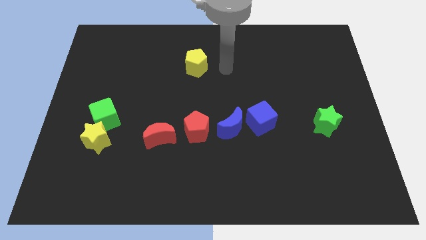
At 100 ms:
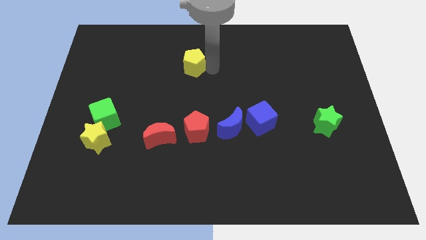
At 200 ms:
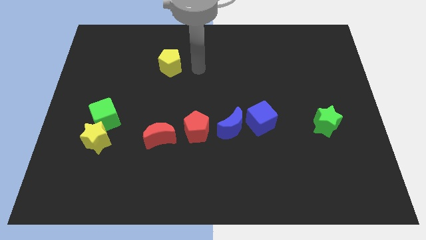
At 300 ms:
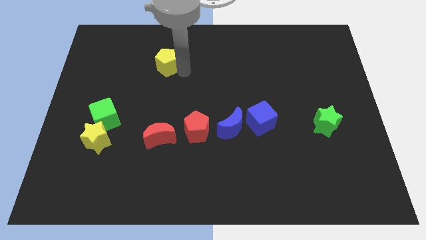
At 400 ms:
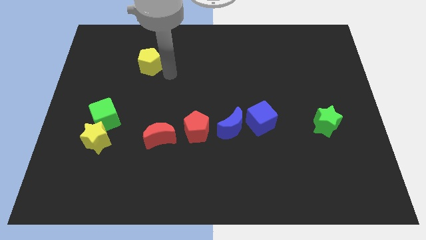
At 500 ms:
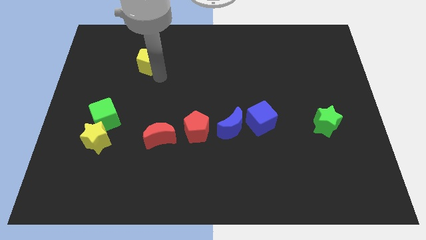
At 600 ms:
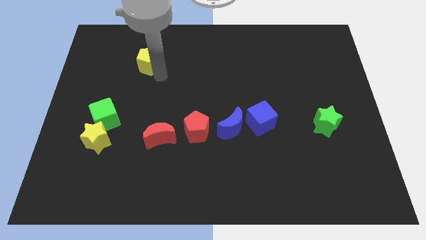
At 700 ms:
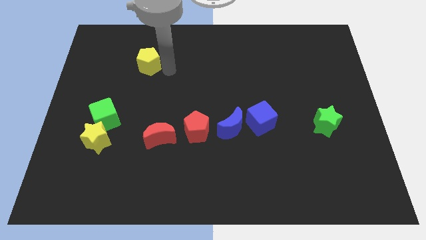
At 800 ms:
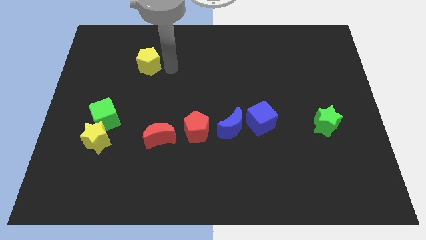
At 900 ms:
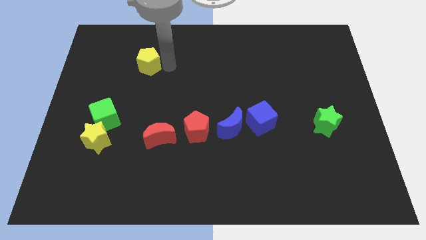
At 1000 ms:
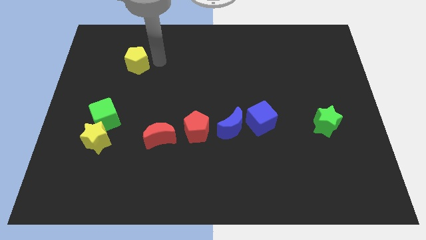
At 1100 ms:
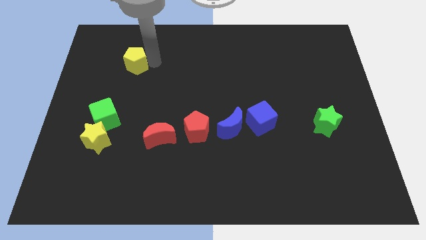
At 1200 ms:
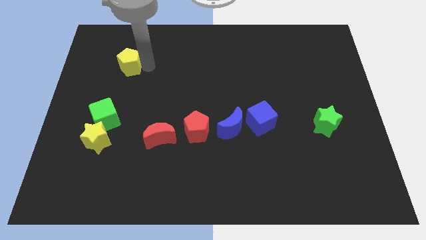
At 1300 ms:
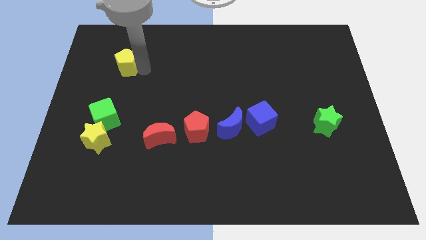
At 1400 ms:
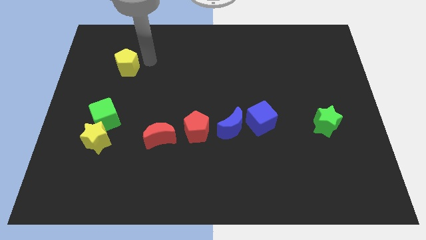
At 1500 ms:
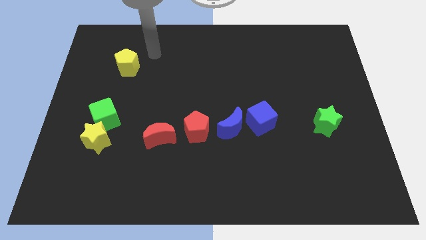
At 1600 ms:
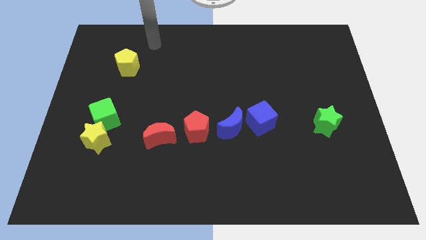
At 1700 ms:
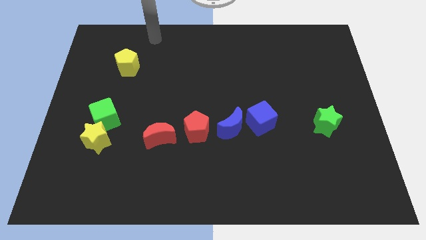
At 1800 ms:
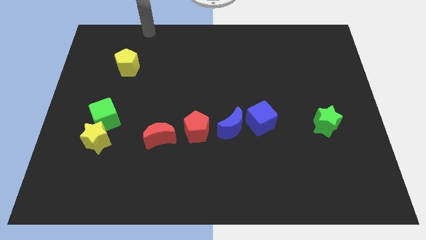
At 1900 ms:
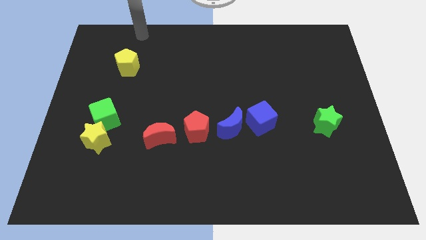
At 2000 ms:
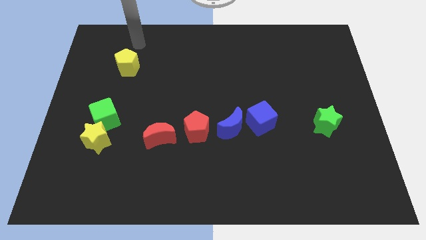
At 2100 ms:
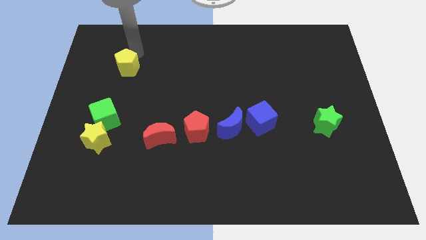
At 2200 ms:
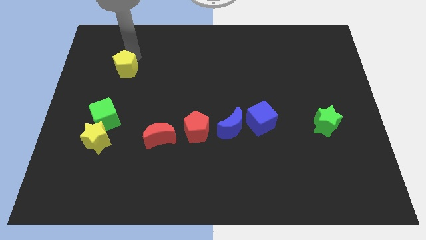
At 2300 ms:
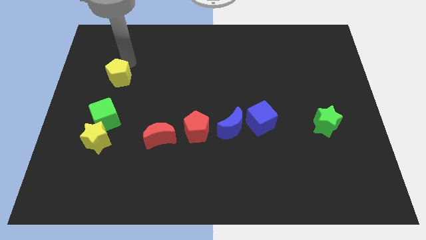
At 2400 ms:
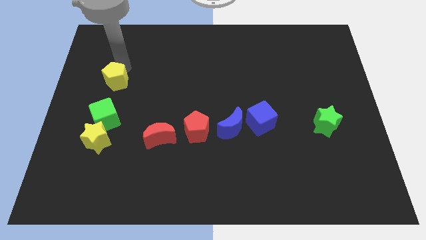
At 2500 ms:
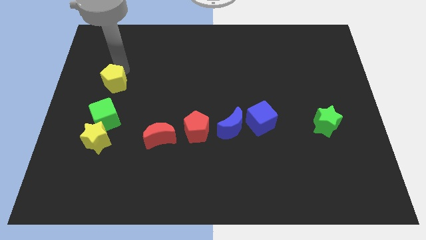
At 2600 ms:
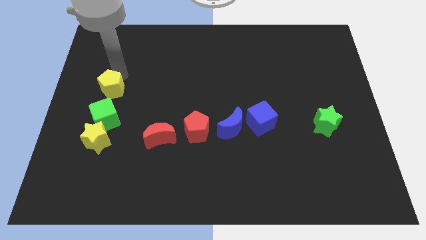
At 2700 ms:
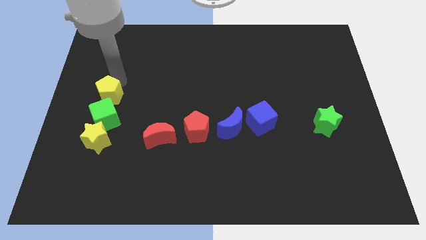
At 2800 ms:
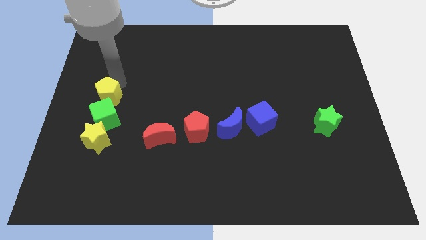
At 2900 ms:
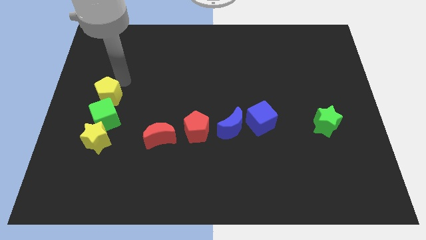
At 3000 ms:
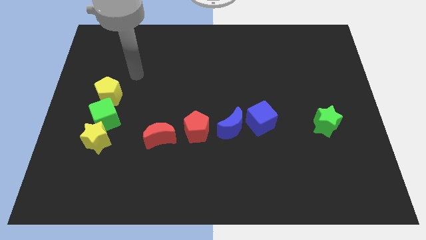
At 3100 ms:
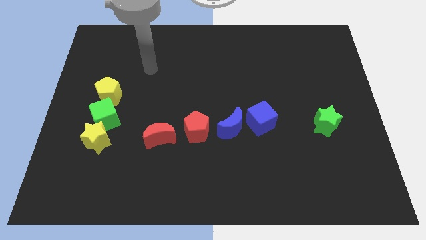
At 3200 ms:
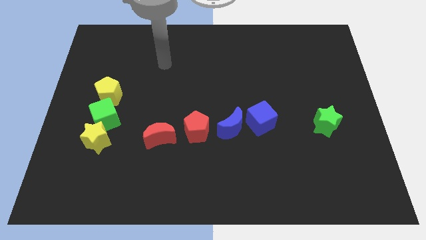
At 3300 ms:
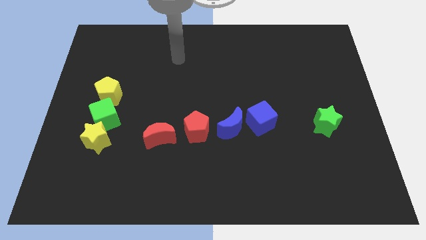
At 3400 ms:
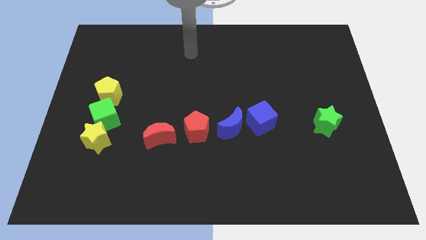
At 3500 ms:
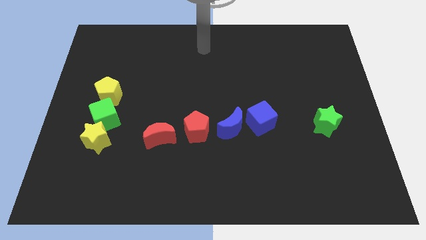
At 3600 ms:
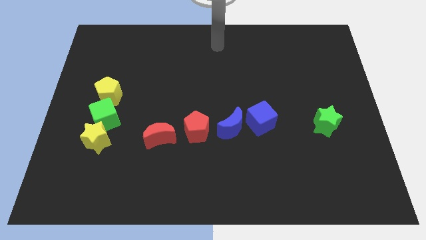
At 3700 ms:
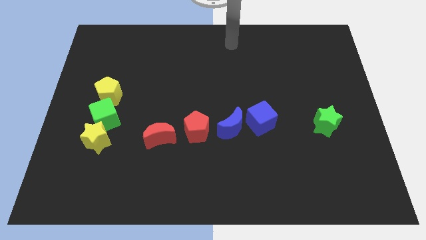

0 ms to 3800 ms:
place the yellow pentagon above the green cube

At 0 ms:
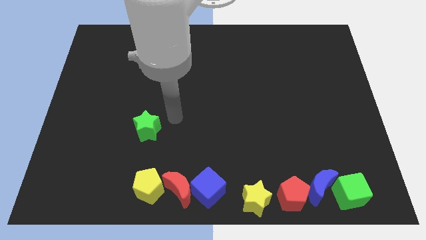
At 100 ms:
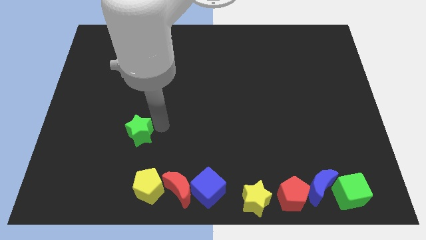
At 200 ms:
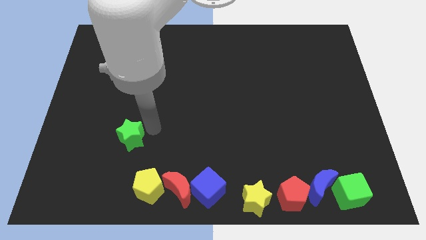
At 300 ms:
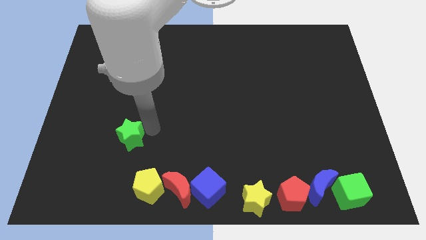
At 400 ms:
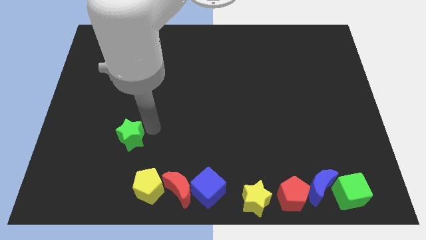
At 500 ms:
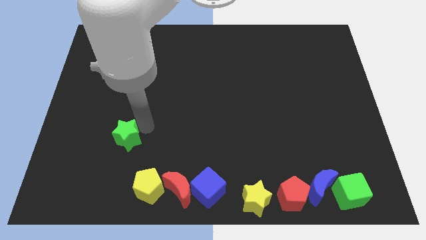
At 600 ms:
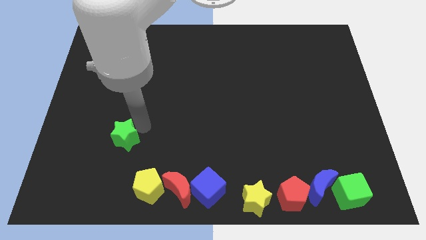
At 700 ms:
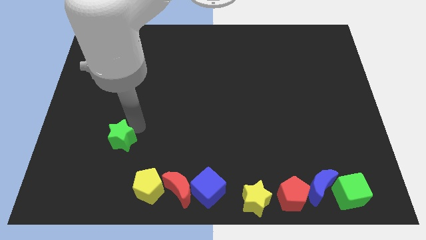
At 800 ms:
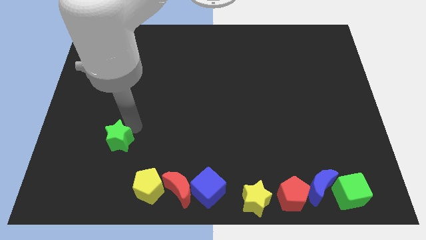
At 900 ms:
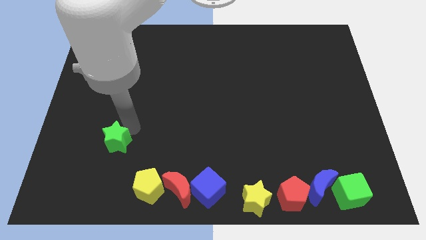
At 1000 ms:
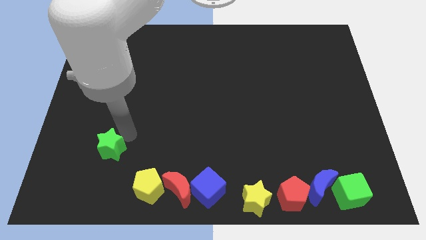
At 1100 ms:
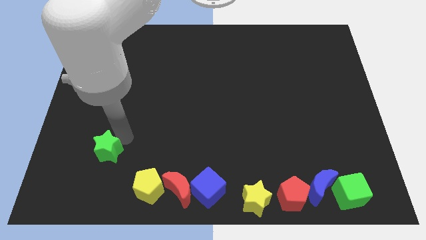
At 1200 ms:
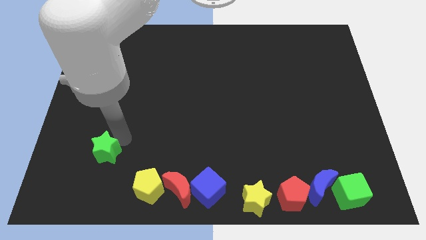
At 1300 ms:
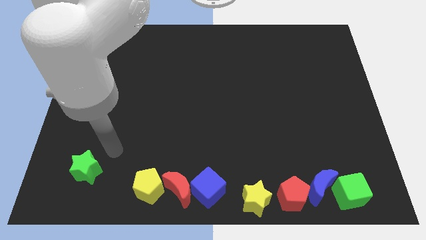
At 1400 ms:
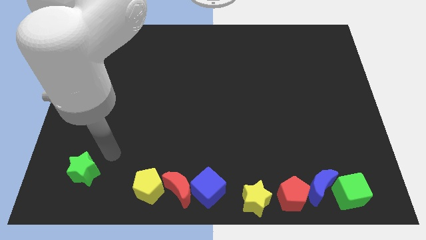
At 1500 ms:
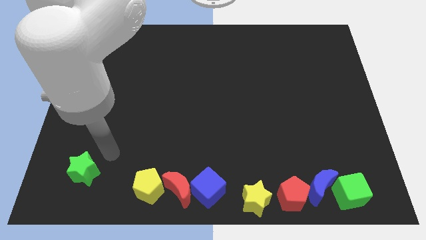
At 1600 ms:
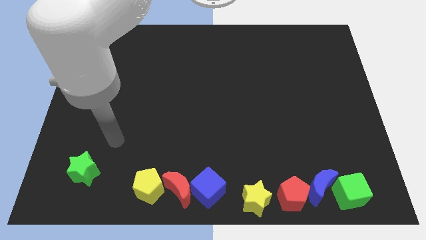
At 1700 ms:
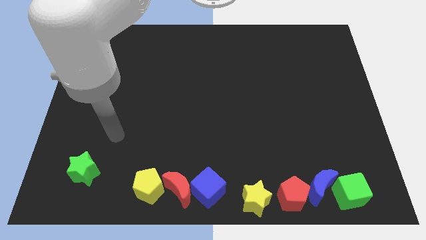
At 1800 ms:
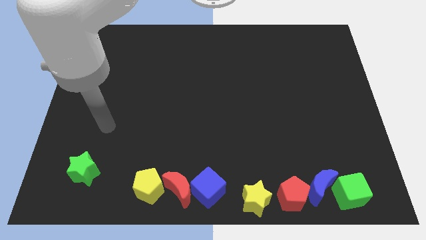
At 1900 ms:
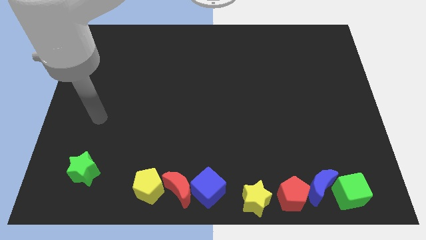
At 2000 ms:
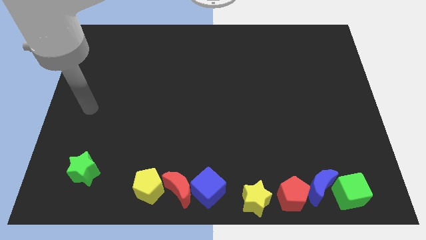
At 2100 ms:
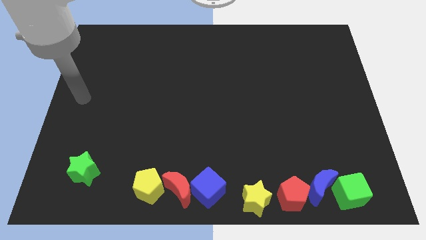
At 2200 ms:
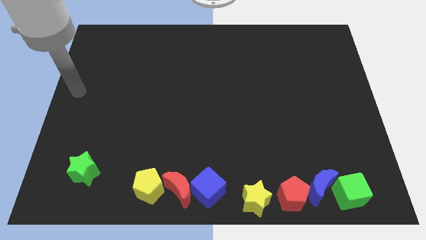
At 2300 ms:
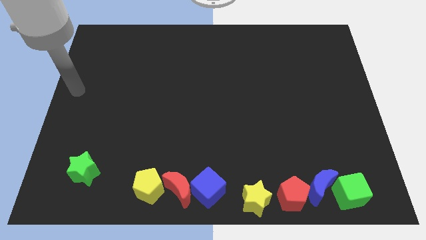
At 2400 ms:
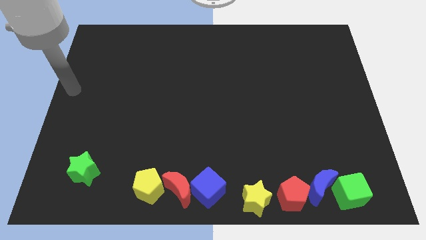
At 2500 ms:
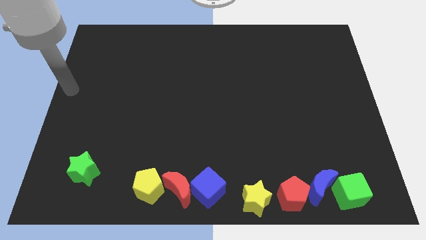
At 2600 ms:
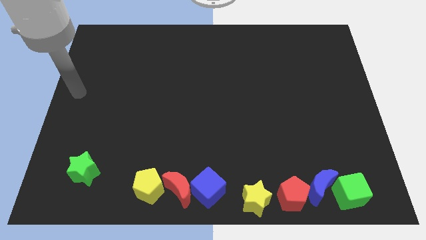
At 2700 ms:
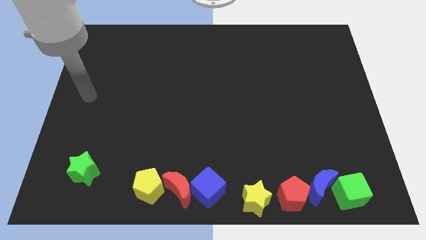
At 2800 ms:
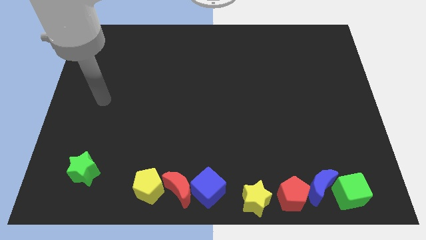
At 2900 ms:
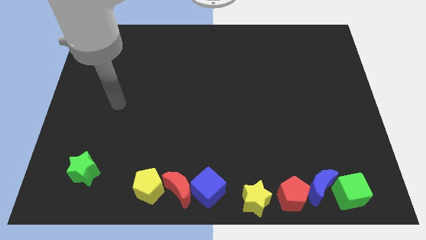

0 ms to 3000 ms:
move the green star diagonally down

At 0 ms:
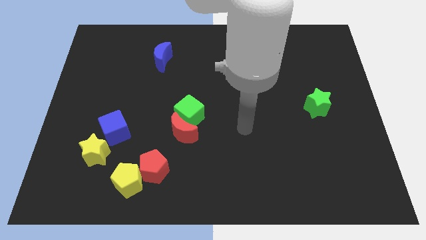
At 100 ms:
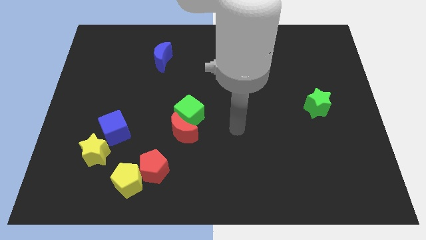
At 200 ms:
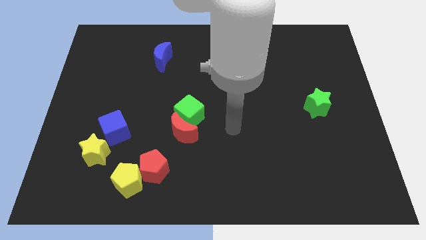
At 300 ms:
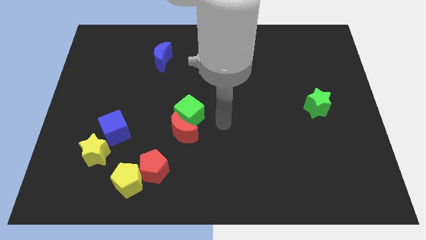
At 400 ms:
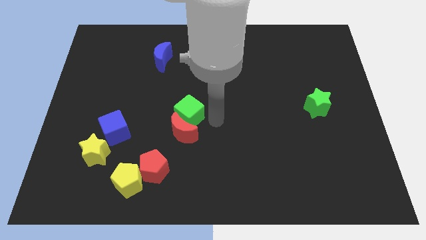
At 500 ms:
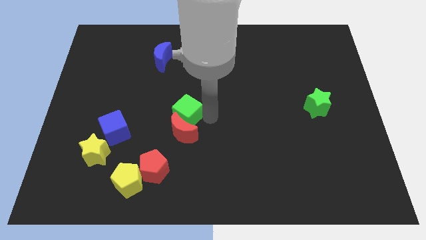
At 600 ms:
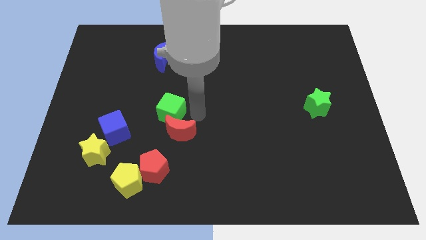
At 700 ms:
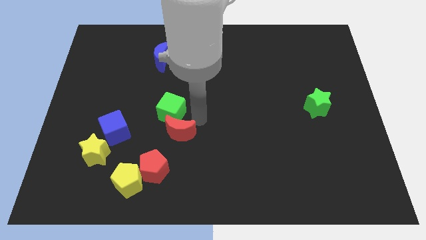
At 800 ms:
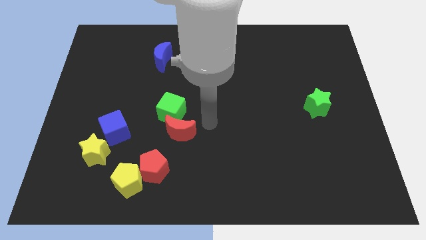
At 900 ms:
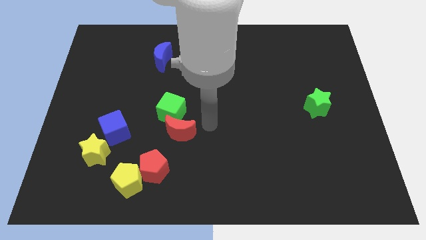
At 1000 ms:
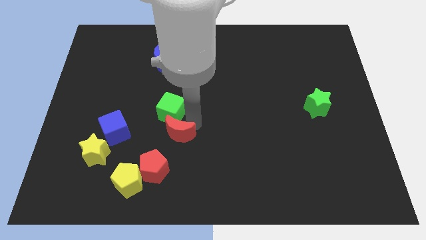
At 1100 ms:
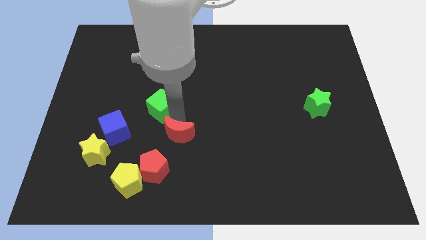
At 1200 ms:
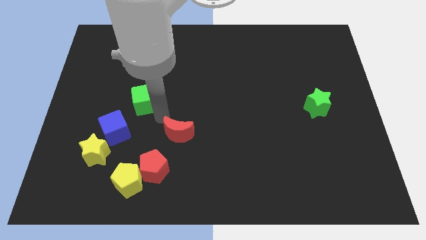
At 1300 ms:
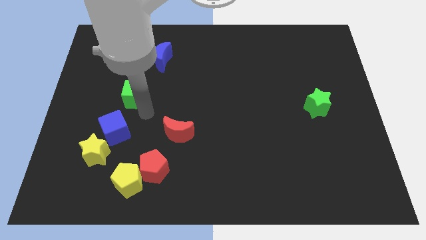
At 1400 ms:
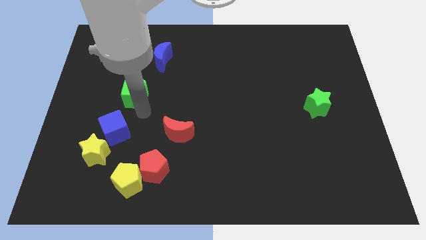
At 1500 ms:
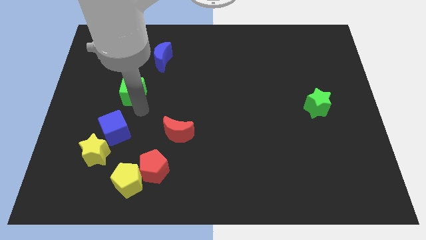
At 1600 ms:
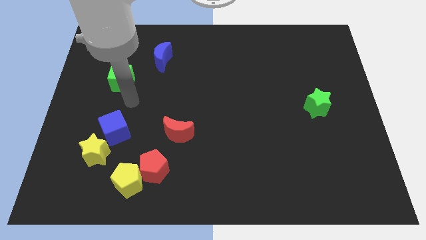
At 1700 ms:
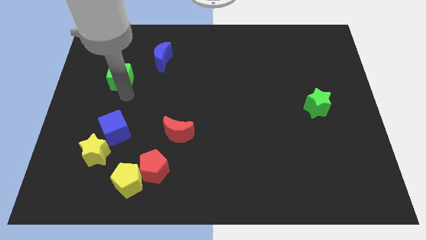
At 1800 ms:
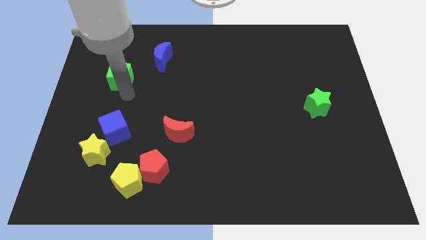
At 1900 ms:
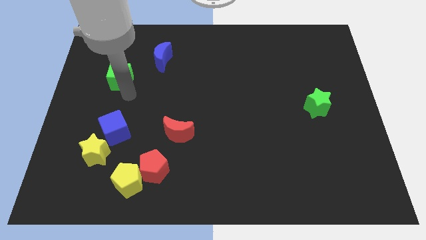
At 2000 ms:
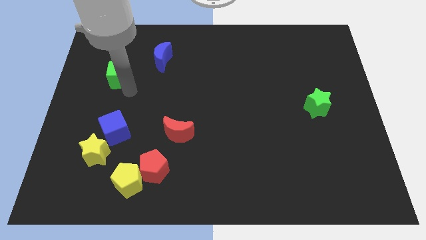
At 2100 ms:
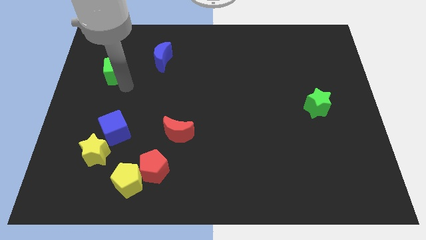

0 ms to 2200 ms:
separate the green cube from red crescent
